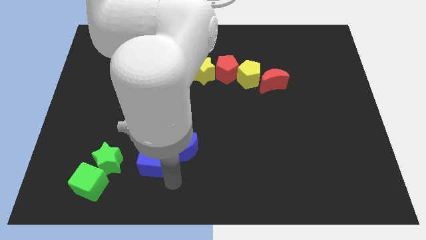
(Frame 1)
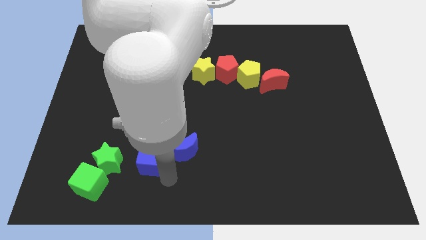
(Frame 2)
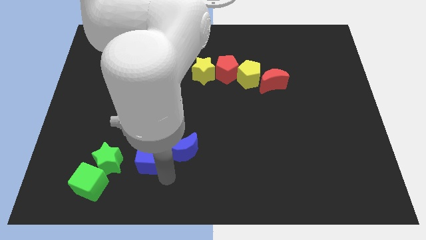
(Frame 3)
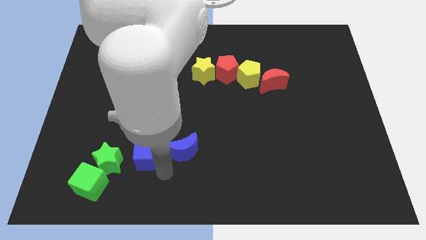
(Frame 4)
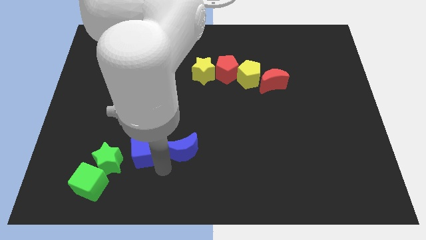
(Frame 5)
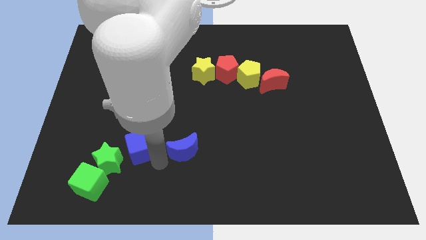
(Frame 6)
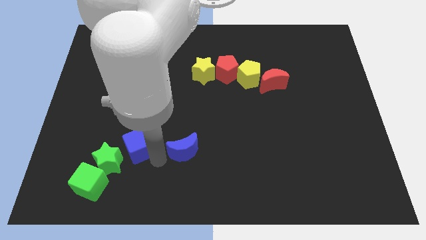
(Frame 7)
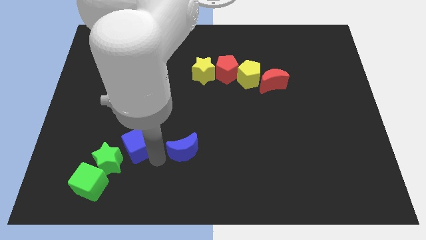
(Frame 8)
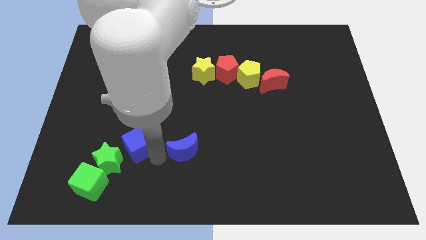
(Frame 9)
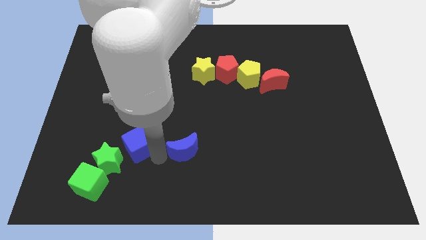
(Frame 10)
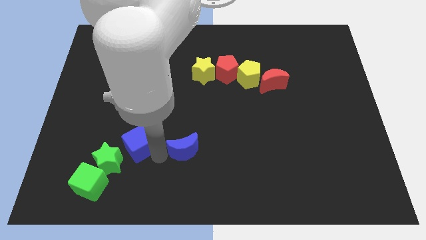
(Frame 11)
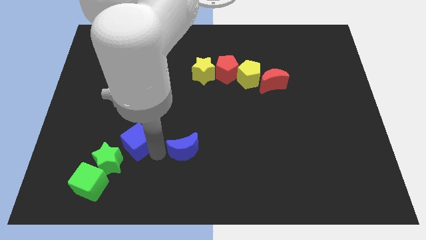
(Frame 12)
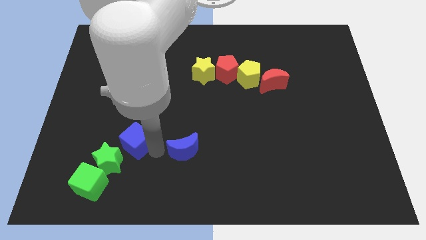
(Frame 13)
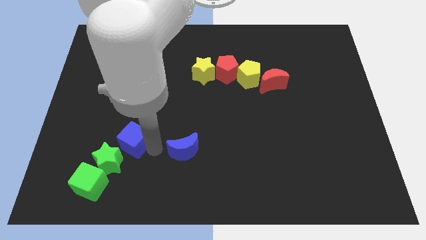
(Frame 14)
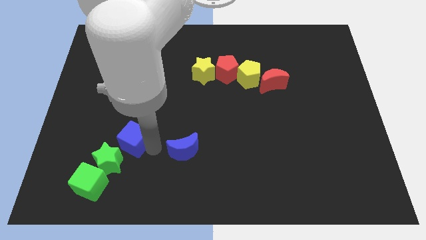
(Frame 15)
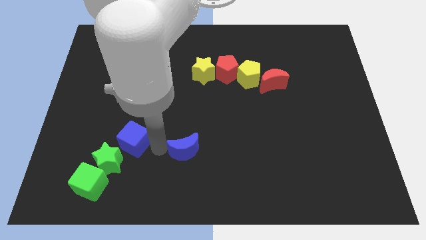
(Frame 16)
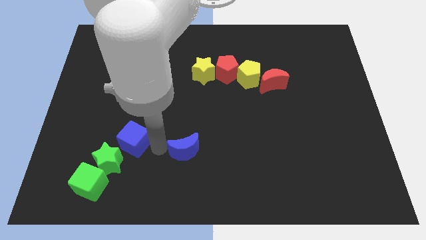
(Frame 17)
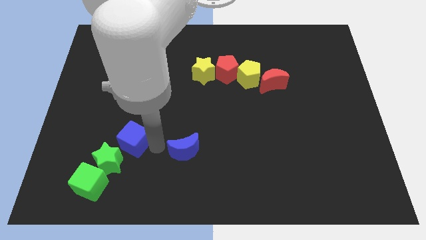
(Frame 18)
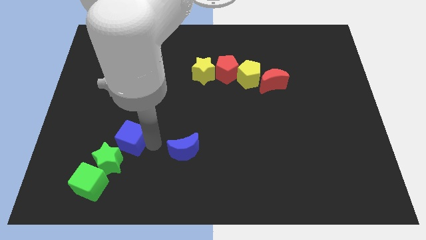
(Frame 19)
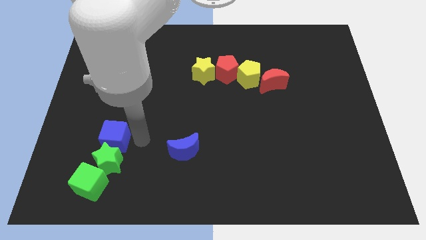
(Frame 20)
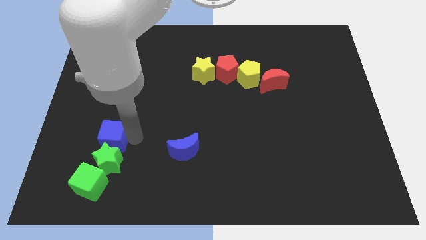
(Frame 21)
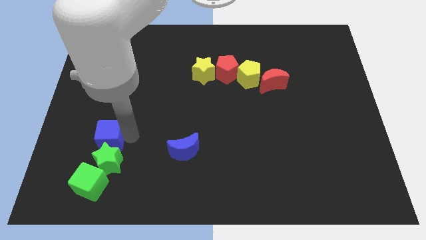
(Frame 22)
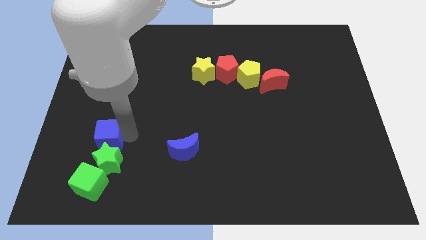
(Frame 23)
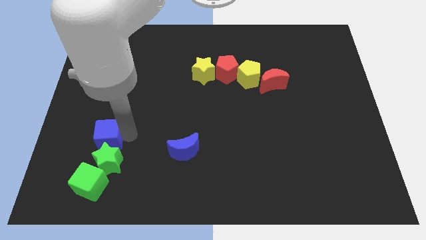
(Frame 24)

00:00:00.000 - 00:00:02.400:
push the blue cube towards on top of the green star

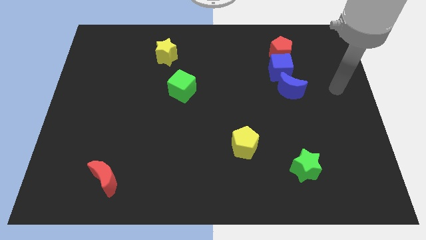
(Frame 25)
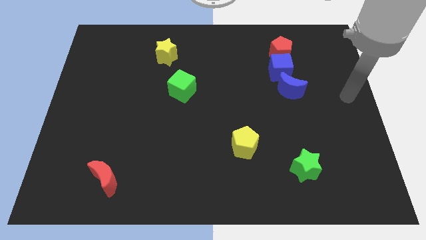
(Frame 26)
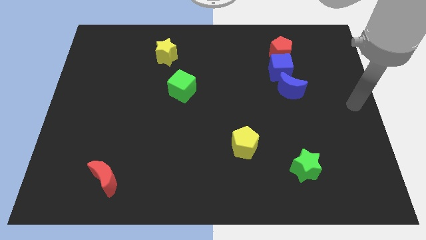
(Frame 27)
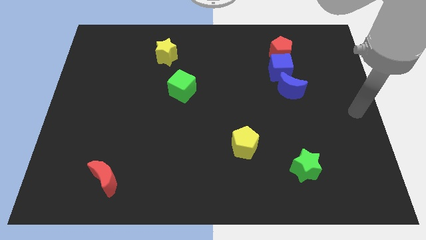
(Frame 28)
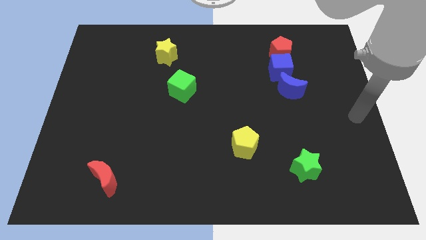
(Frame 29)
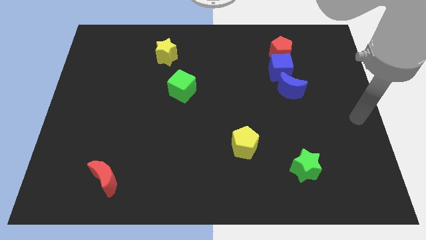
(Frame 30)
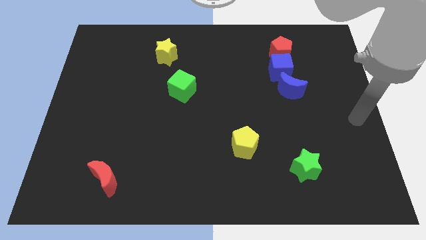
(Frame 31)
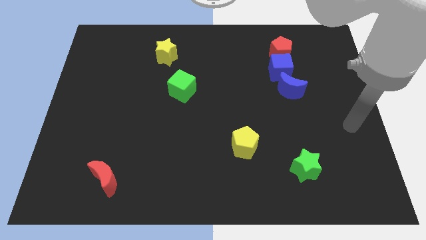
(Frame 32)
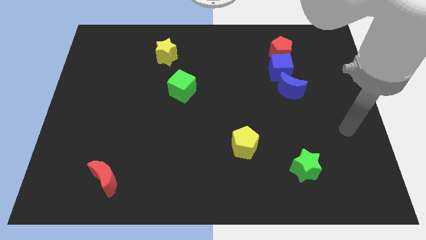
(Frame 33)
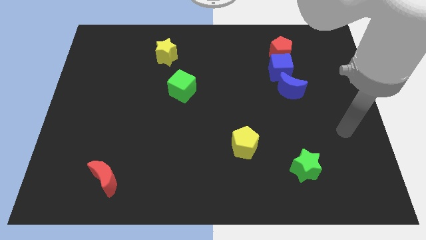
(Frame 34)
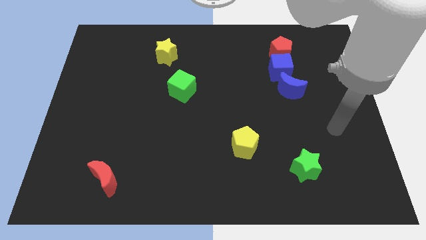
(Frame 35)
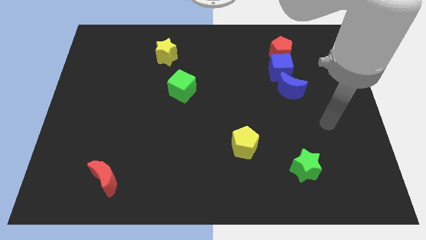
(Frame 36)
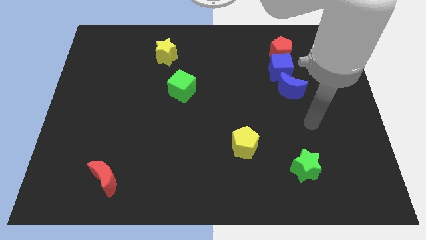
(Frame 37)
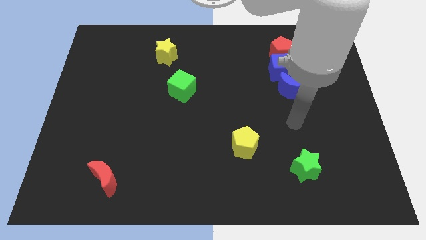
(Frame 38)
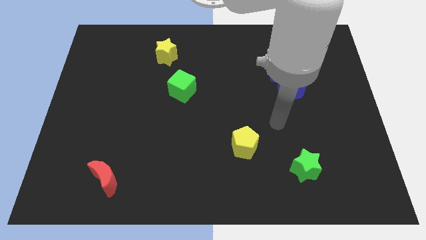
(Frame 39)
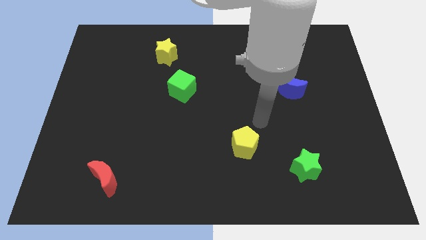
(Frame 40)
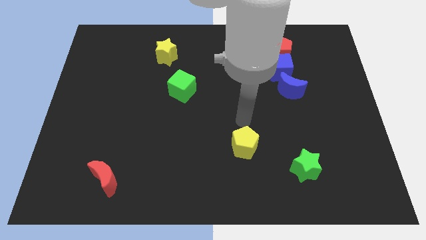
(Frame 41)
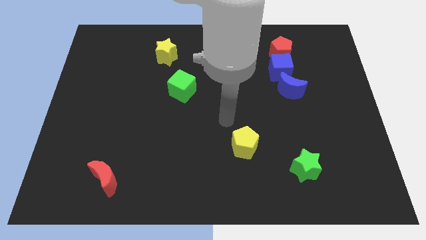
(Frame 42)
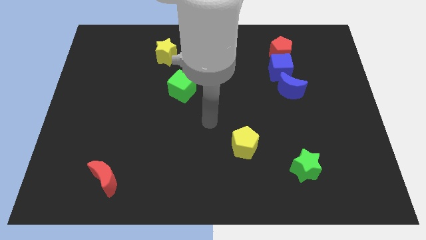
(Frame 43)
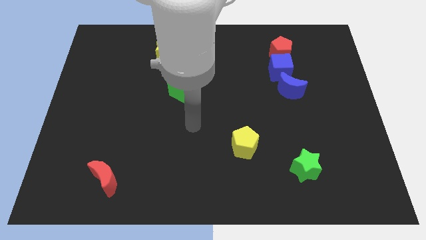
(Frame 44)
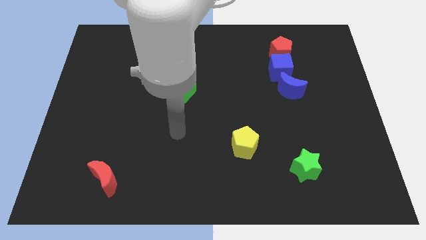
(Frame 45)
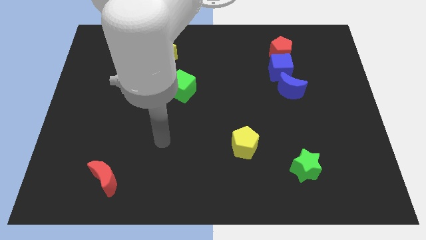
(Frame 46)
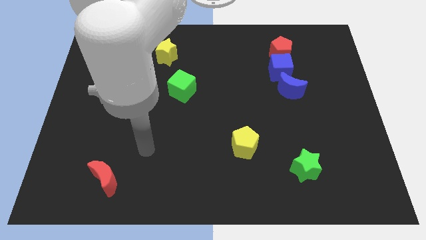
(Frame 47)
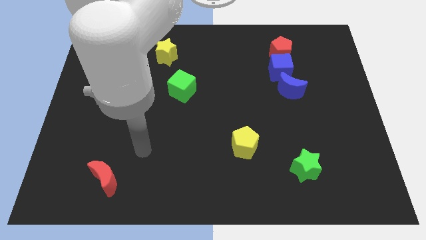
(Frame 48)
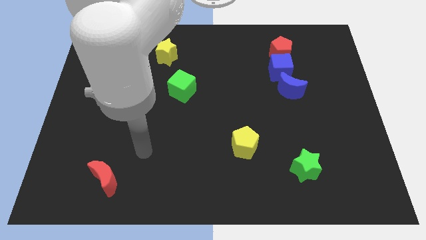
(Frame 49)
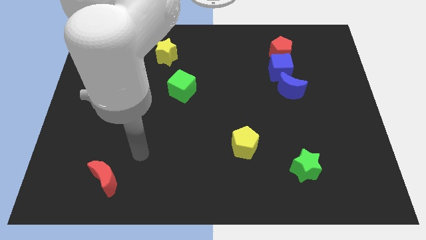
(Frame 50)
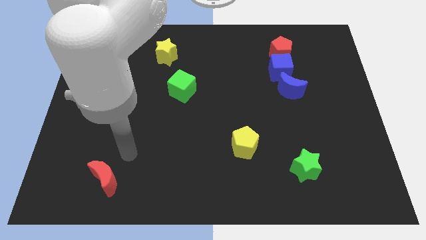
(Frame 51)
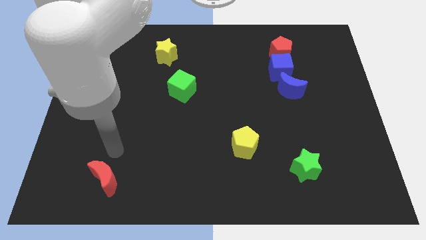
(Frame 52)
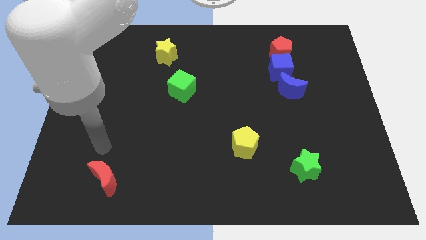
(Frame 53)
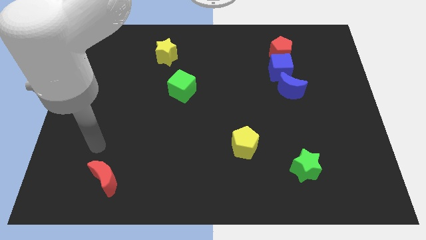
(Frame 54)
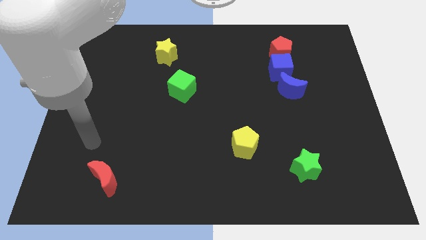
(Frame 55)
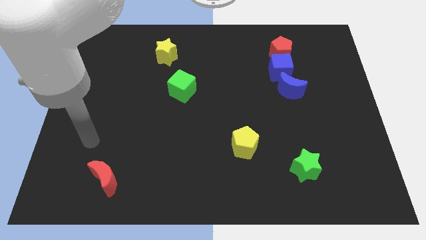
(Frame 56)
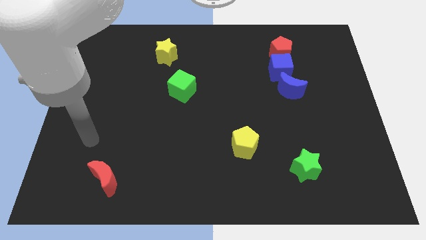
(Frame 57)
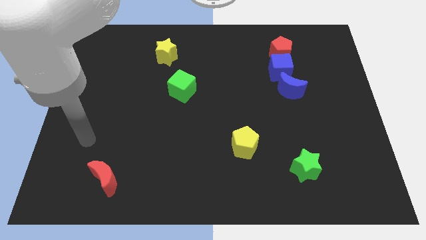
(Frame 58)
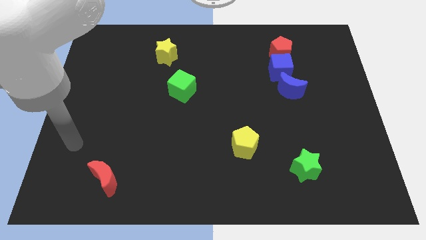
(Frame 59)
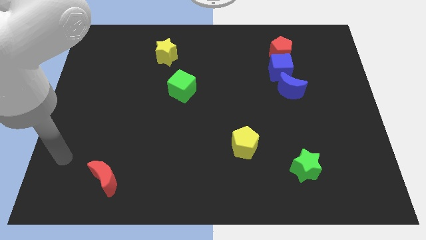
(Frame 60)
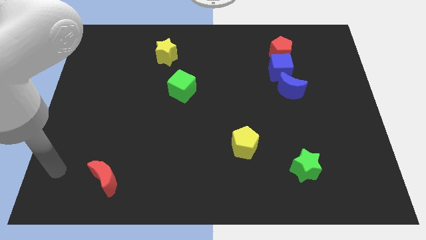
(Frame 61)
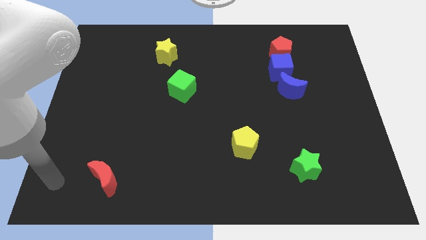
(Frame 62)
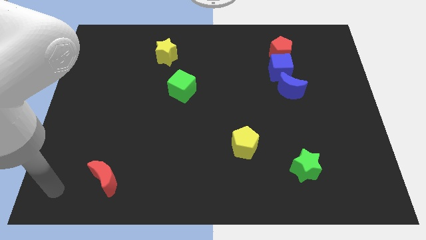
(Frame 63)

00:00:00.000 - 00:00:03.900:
move your arm towards the red moon

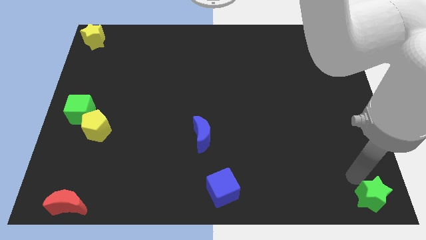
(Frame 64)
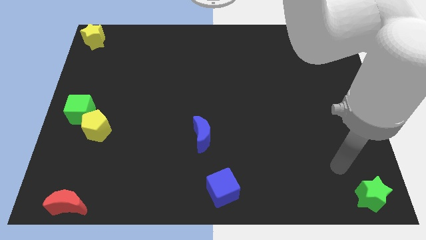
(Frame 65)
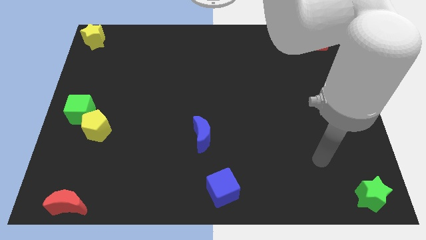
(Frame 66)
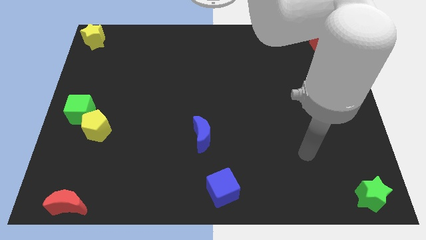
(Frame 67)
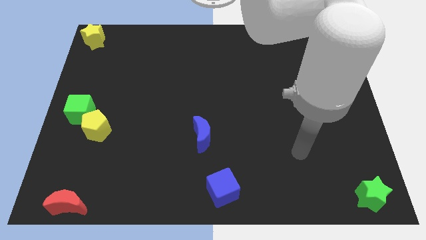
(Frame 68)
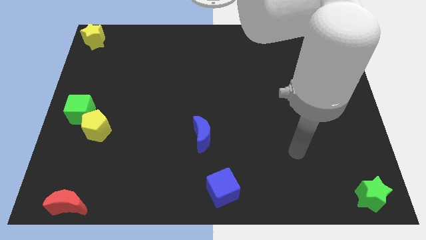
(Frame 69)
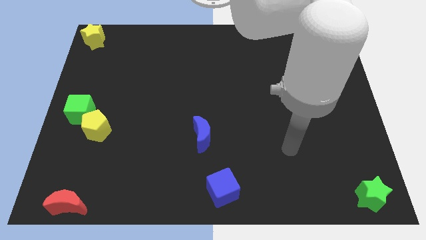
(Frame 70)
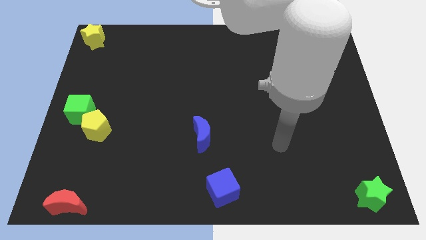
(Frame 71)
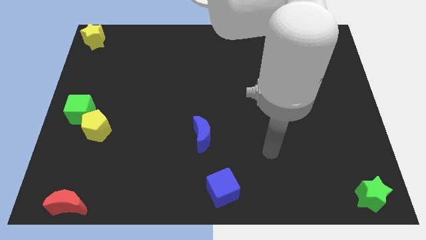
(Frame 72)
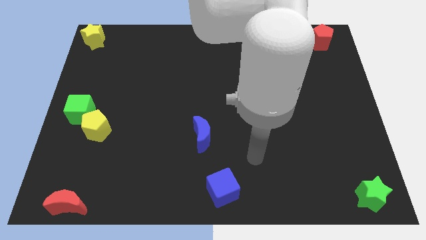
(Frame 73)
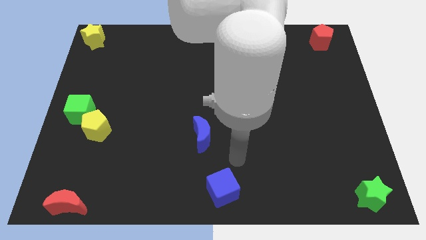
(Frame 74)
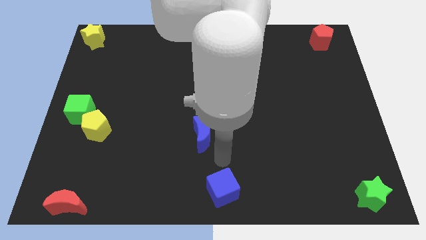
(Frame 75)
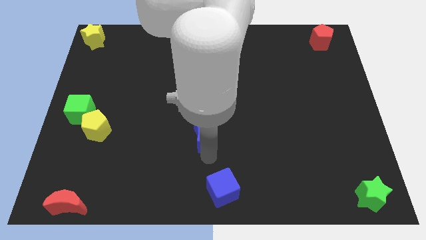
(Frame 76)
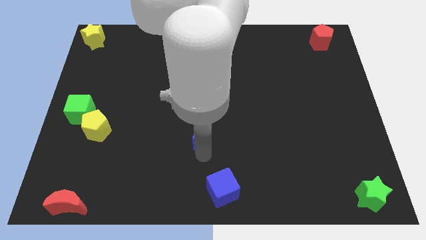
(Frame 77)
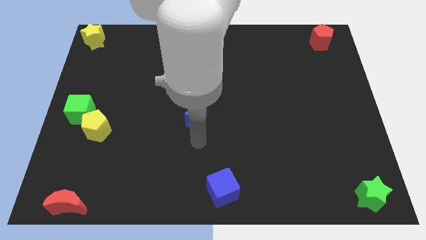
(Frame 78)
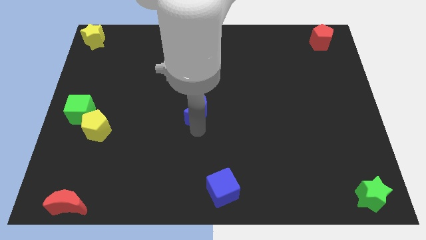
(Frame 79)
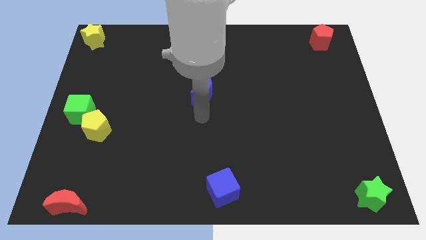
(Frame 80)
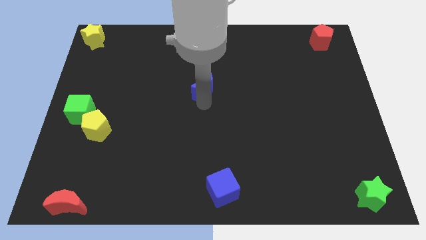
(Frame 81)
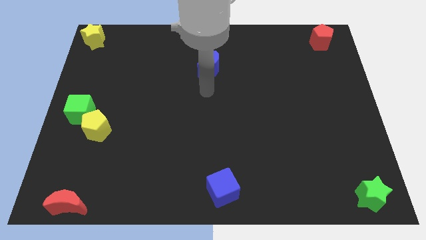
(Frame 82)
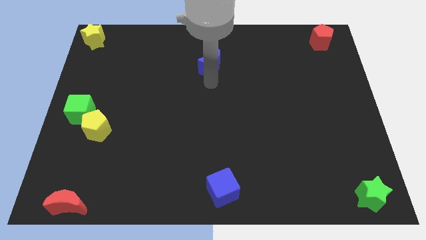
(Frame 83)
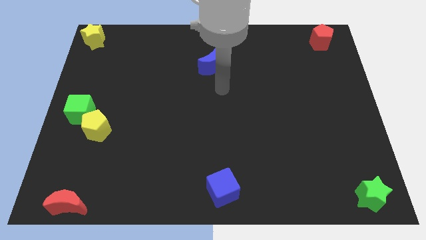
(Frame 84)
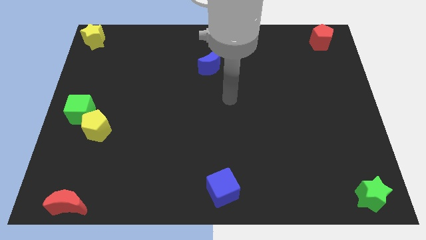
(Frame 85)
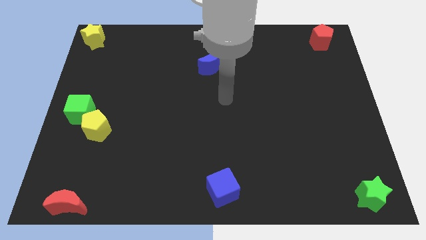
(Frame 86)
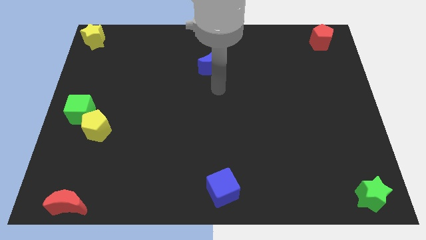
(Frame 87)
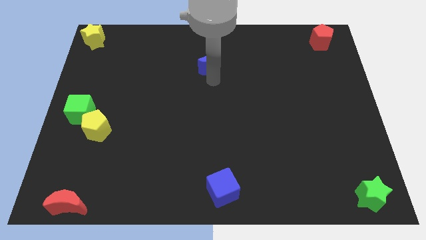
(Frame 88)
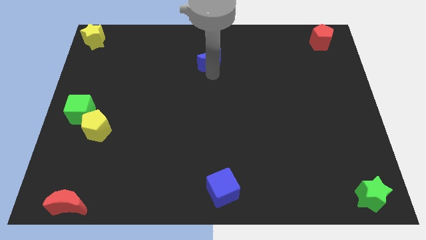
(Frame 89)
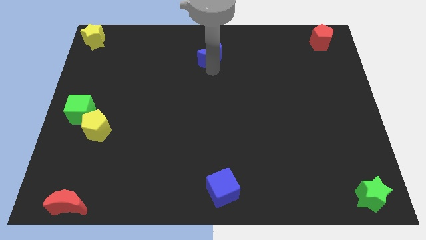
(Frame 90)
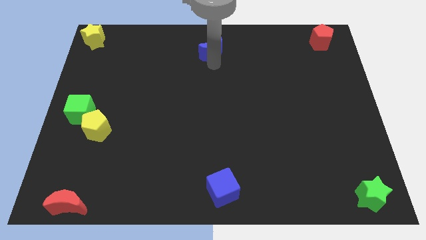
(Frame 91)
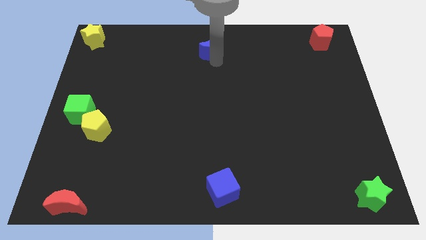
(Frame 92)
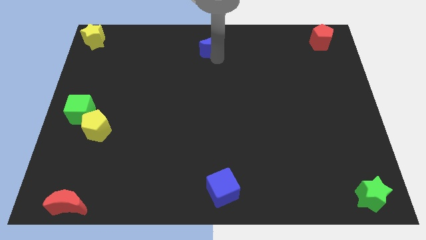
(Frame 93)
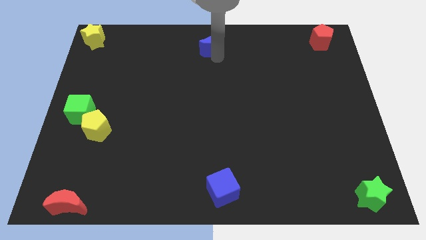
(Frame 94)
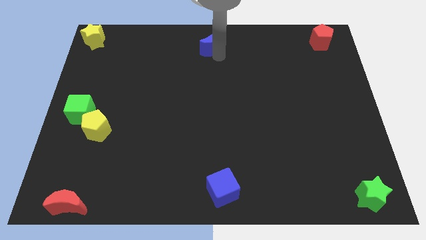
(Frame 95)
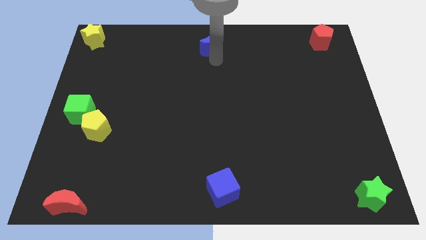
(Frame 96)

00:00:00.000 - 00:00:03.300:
push the blue crescent to the top center
